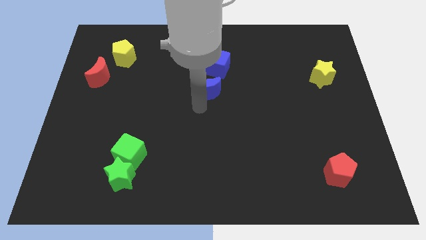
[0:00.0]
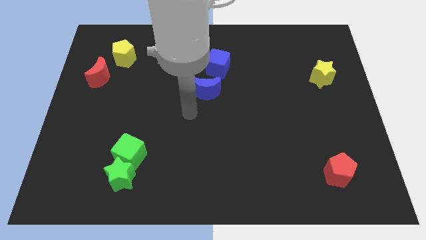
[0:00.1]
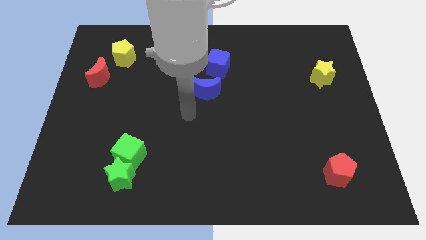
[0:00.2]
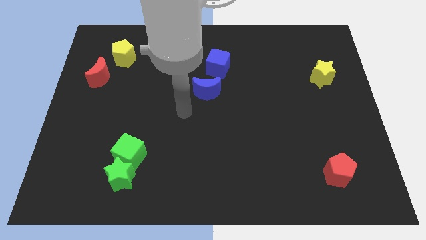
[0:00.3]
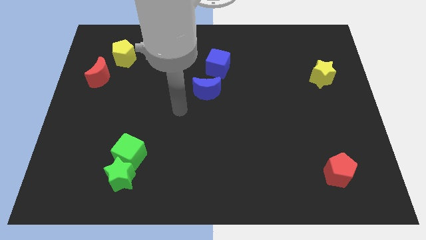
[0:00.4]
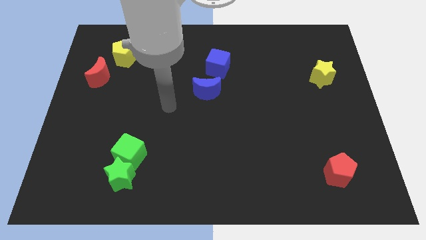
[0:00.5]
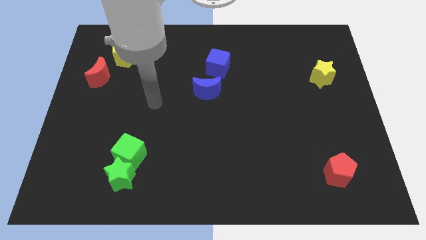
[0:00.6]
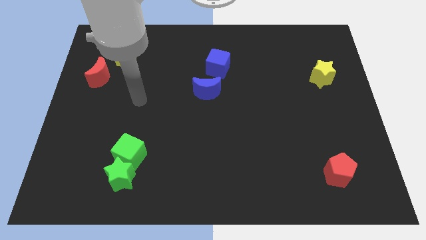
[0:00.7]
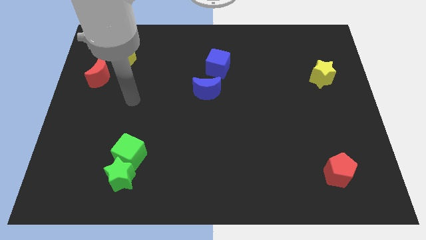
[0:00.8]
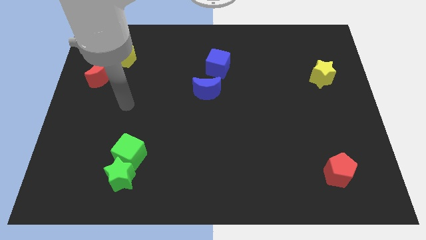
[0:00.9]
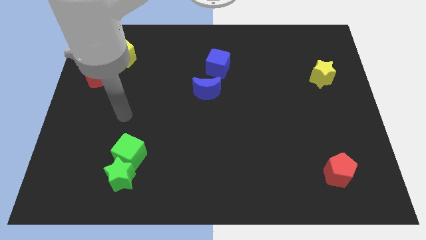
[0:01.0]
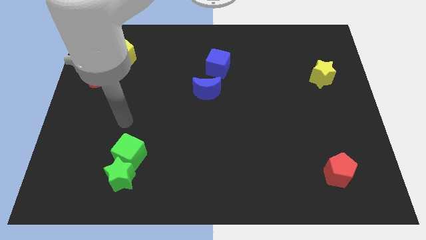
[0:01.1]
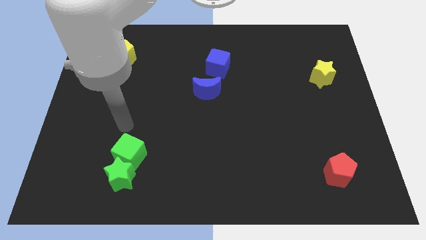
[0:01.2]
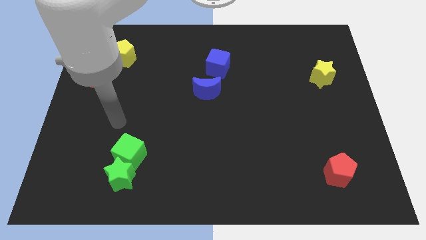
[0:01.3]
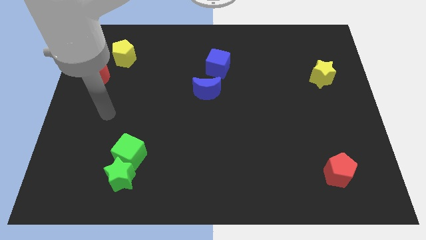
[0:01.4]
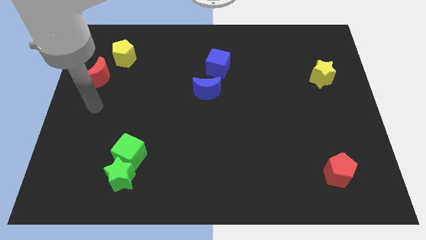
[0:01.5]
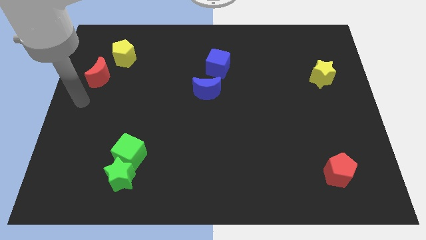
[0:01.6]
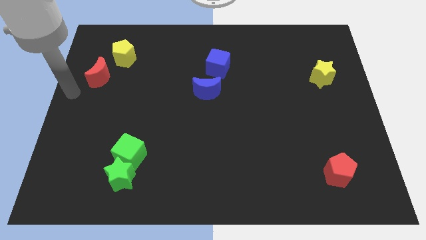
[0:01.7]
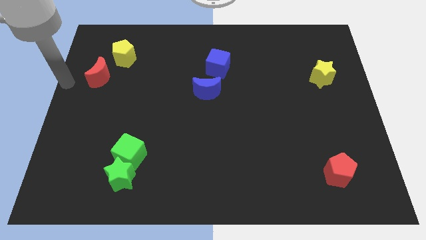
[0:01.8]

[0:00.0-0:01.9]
move your arm towards the left side of the board

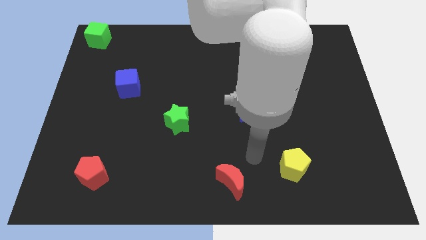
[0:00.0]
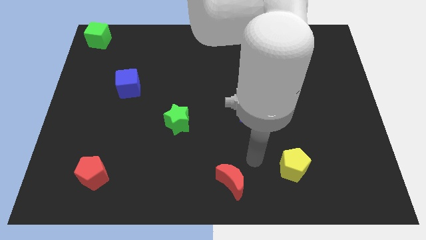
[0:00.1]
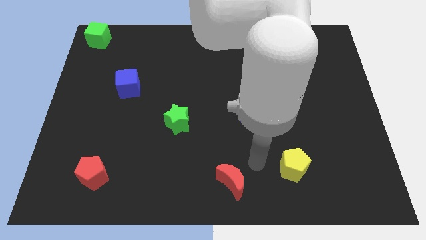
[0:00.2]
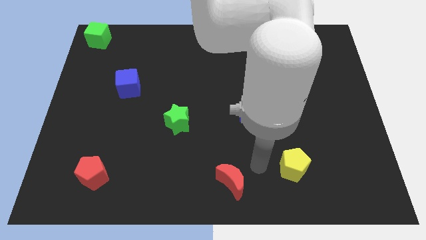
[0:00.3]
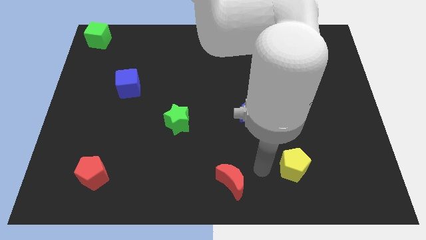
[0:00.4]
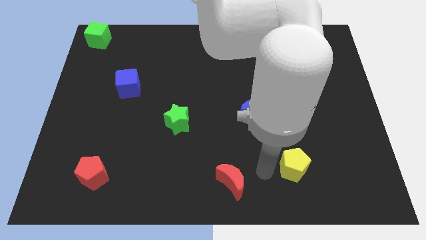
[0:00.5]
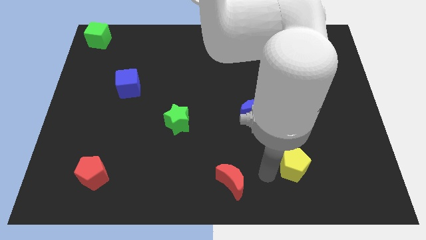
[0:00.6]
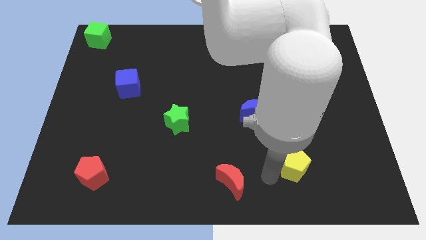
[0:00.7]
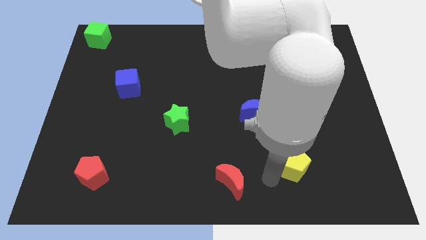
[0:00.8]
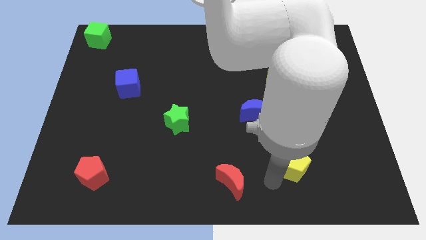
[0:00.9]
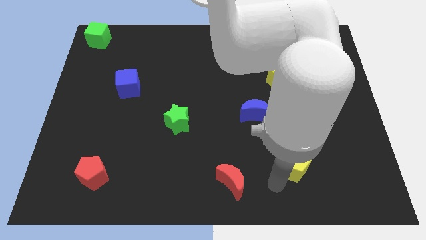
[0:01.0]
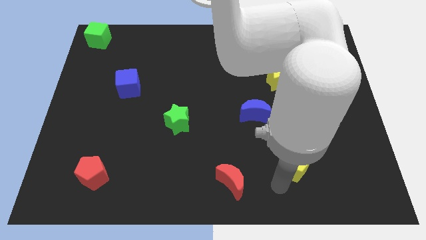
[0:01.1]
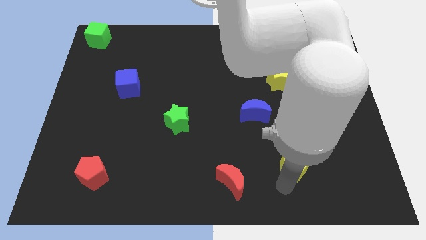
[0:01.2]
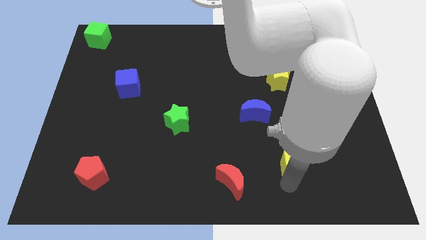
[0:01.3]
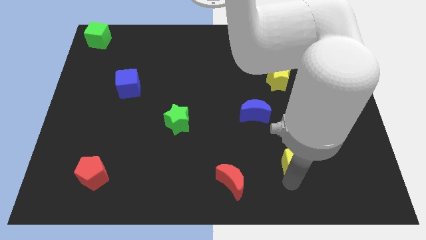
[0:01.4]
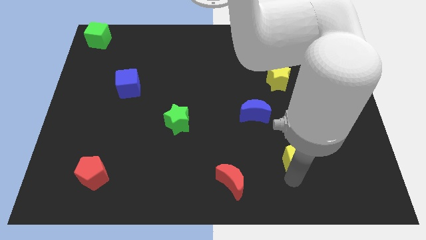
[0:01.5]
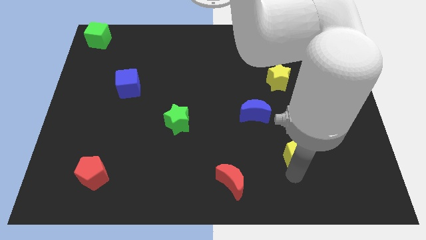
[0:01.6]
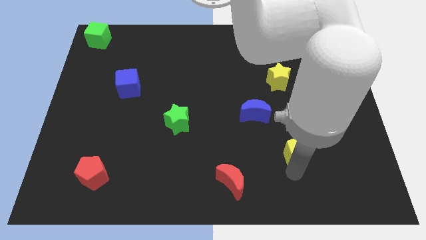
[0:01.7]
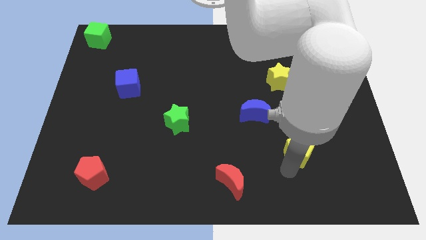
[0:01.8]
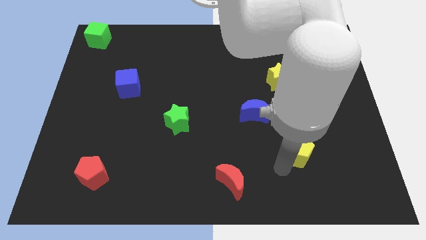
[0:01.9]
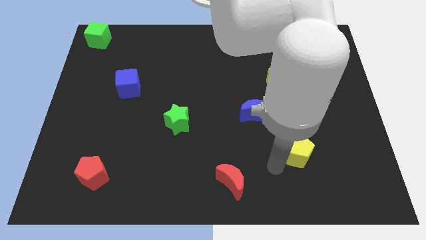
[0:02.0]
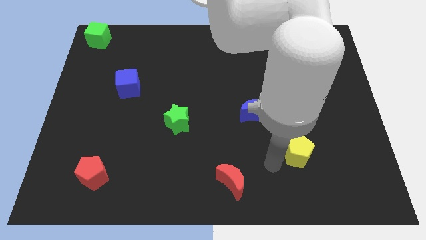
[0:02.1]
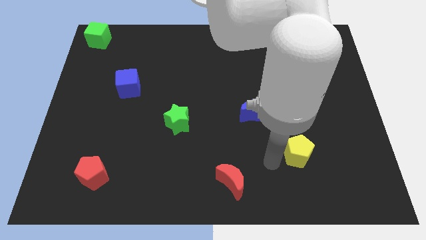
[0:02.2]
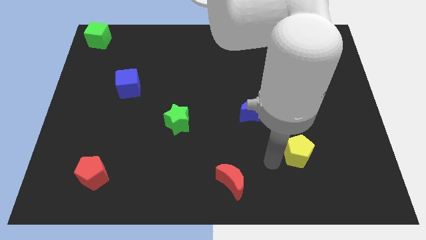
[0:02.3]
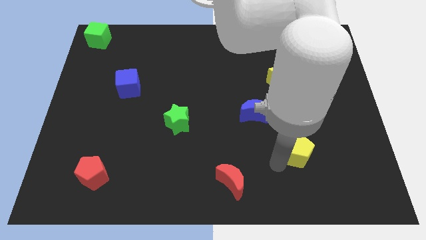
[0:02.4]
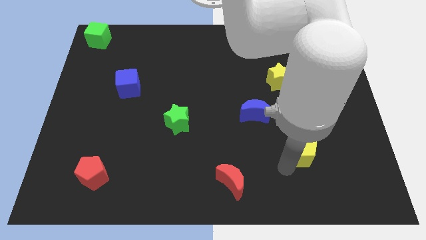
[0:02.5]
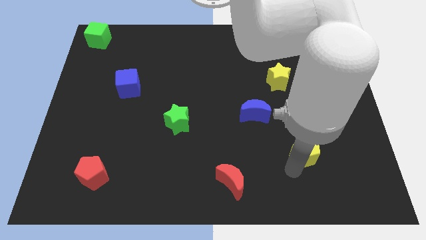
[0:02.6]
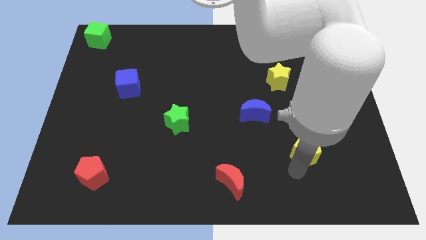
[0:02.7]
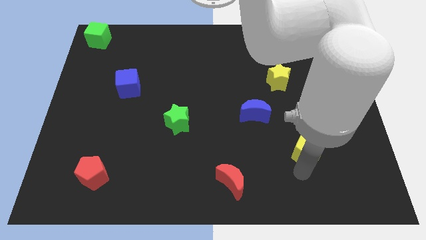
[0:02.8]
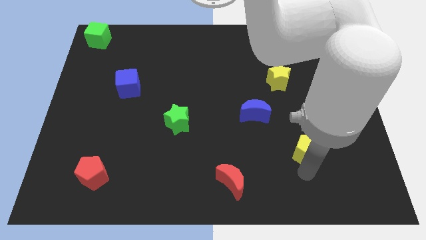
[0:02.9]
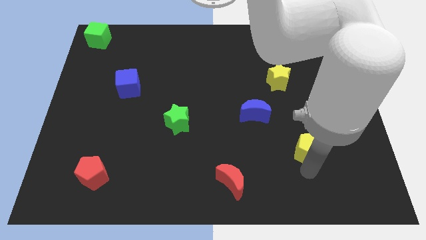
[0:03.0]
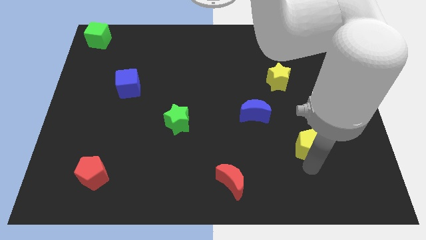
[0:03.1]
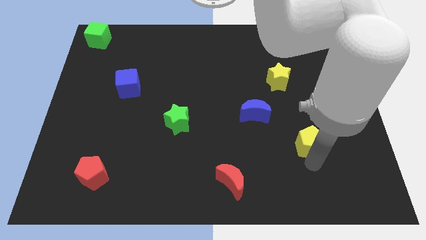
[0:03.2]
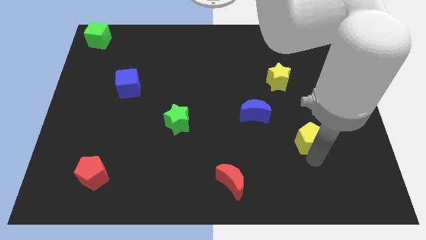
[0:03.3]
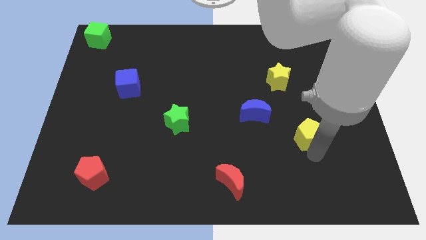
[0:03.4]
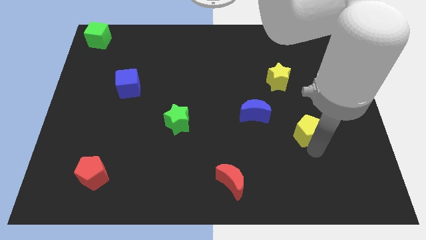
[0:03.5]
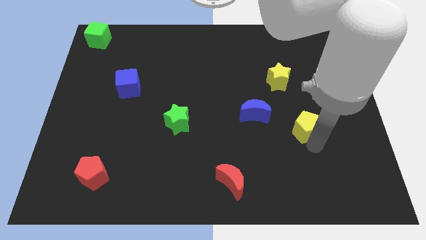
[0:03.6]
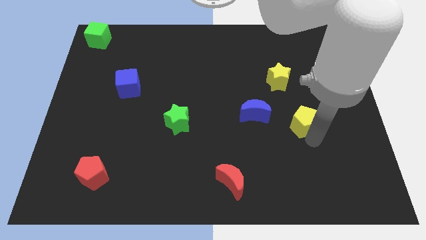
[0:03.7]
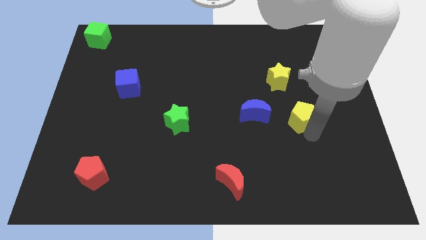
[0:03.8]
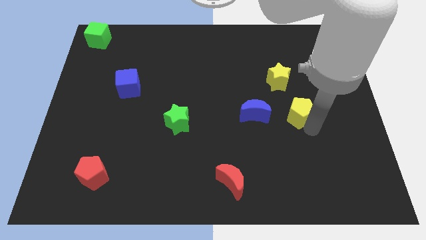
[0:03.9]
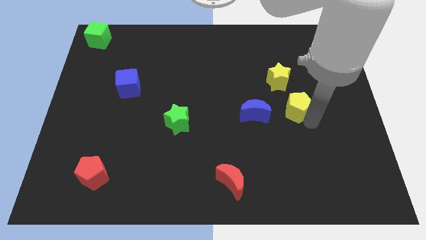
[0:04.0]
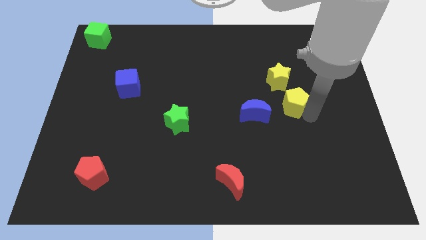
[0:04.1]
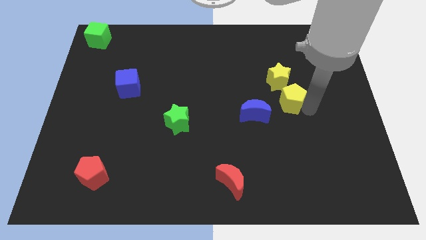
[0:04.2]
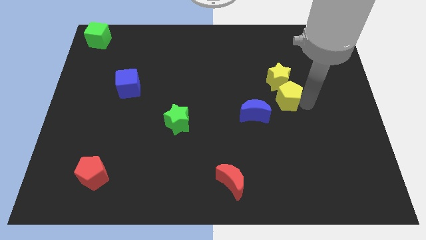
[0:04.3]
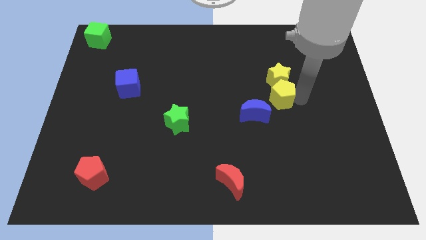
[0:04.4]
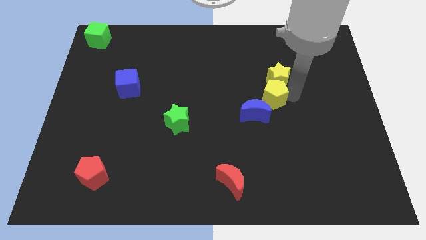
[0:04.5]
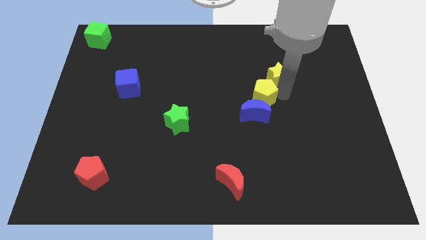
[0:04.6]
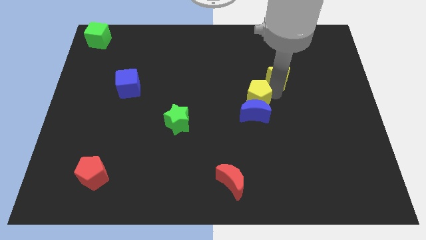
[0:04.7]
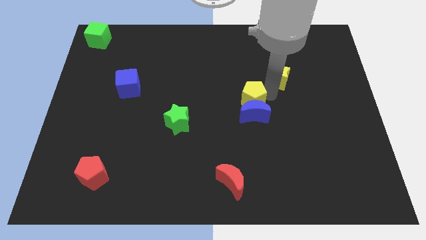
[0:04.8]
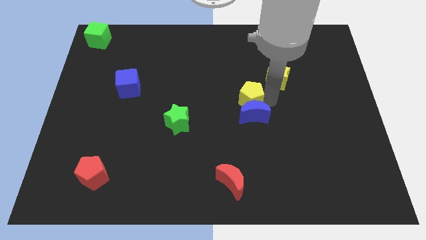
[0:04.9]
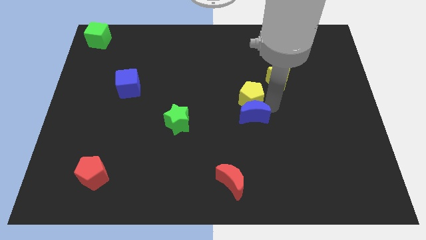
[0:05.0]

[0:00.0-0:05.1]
slide yellow pentagon on top of blue moon

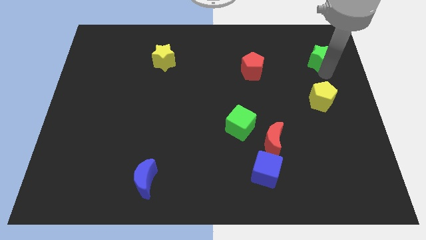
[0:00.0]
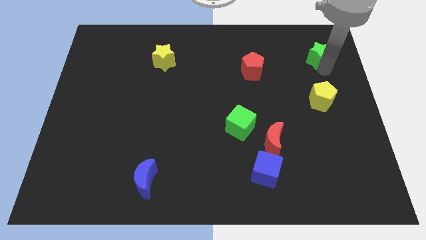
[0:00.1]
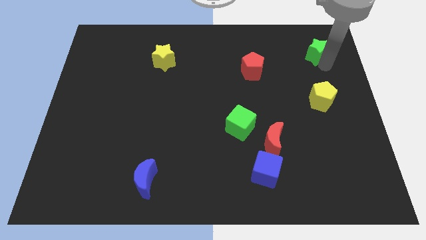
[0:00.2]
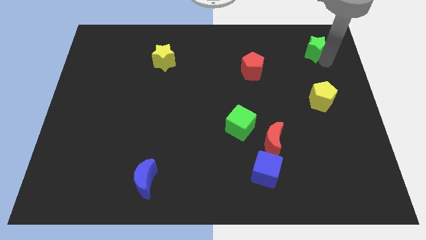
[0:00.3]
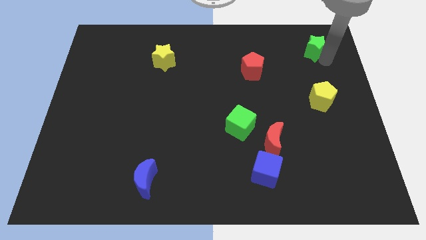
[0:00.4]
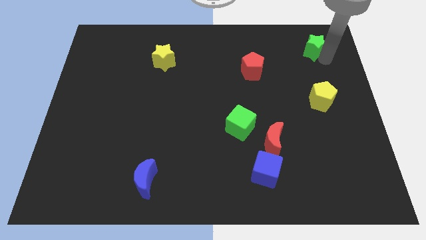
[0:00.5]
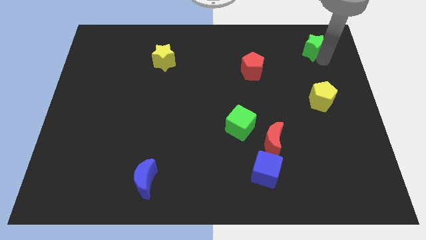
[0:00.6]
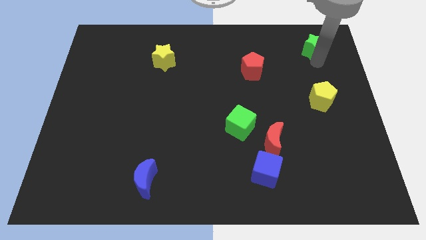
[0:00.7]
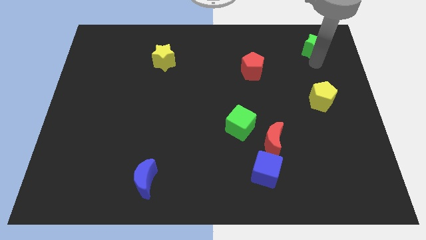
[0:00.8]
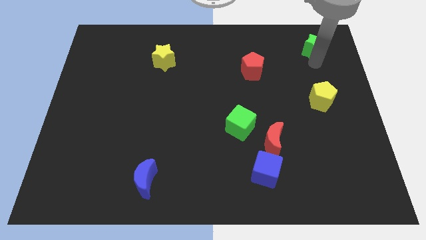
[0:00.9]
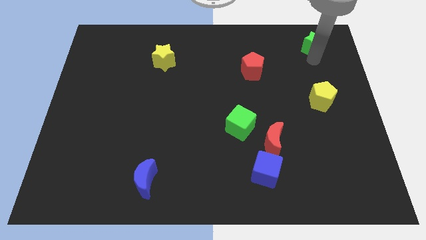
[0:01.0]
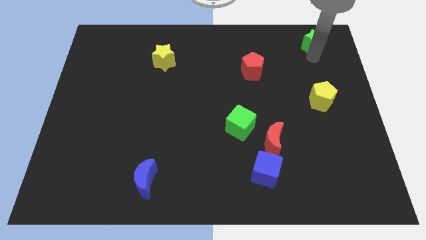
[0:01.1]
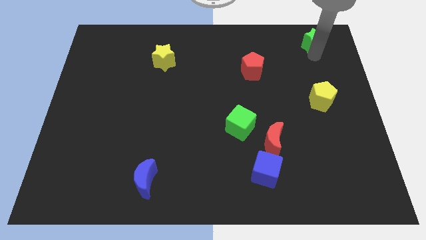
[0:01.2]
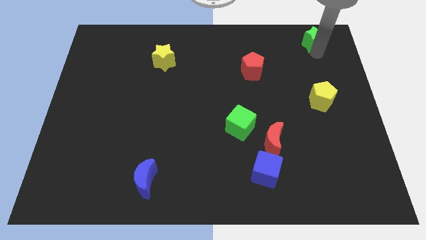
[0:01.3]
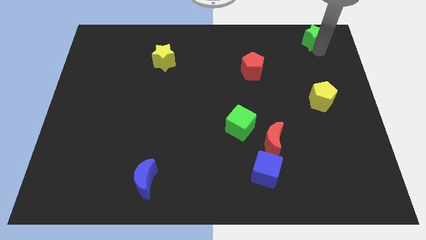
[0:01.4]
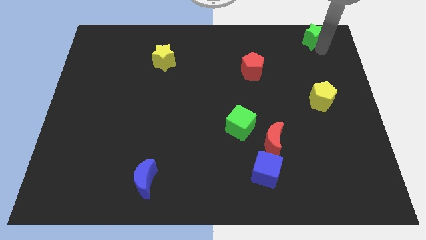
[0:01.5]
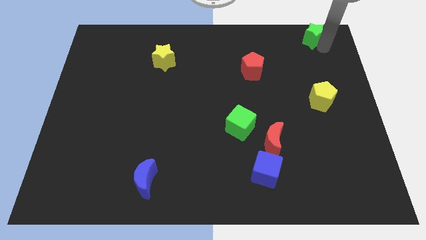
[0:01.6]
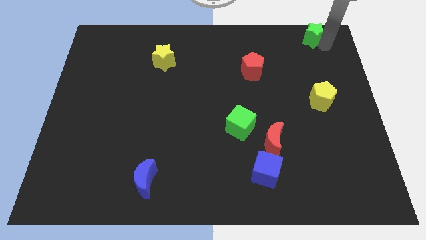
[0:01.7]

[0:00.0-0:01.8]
push green star towards top

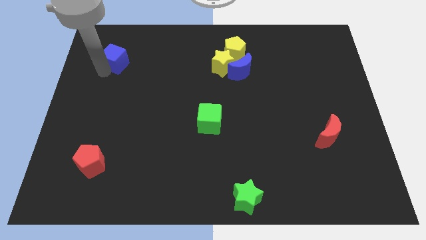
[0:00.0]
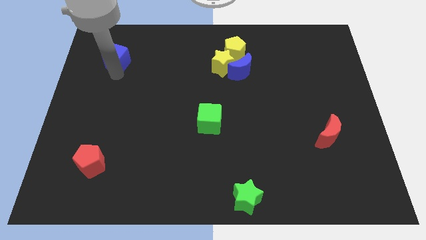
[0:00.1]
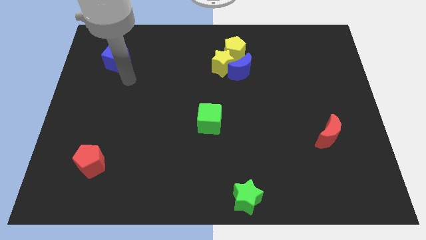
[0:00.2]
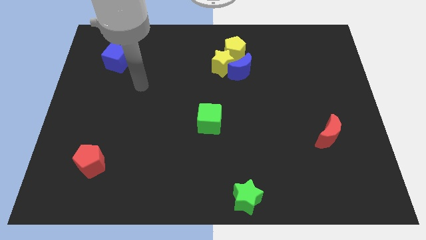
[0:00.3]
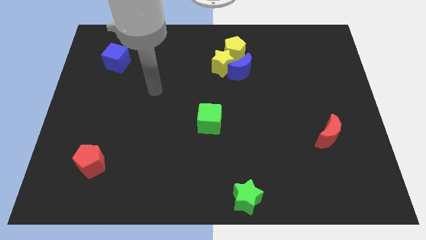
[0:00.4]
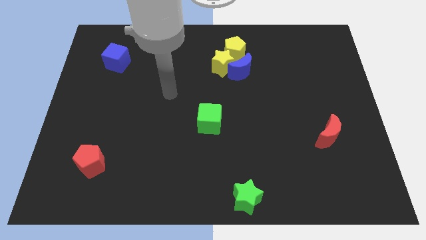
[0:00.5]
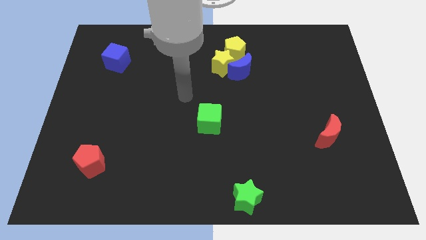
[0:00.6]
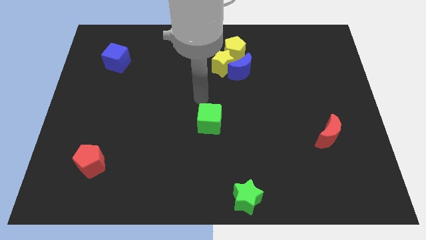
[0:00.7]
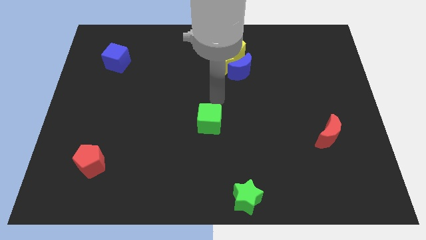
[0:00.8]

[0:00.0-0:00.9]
point your arm at the top of green cube
